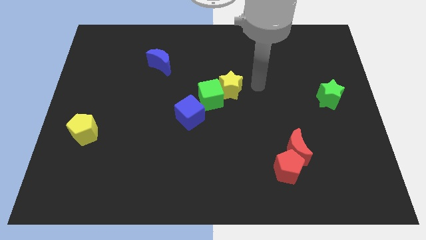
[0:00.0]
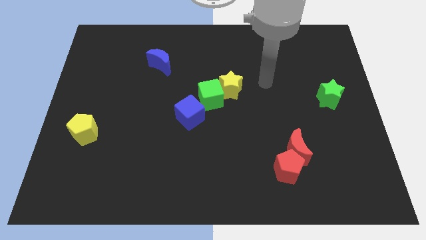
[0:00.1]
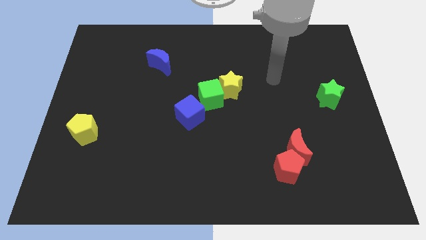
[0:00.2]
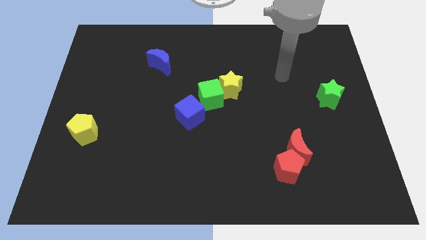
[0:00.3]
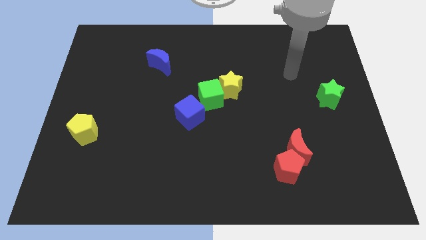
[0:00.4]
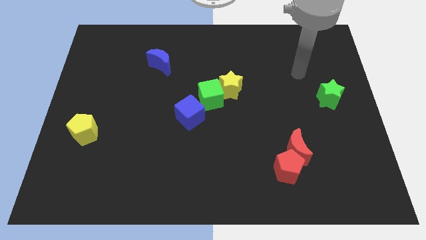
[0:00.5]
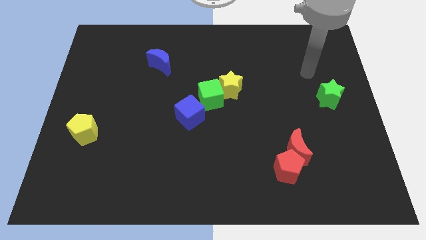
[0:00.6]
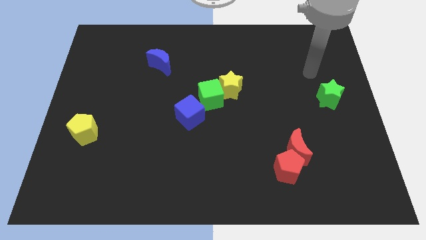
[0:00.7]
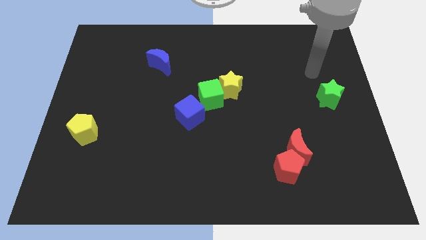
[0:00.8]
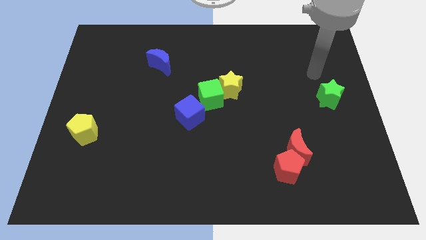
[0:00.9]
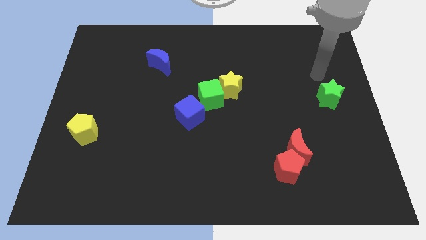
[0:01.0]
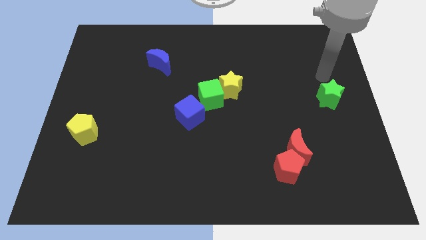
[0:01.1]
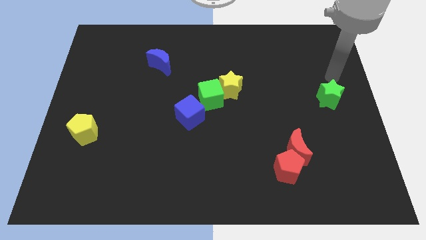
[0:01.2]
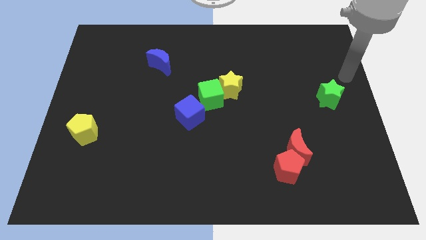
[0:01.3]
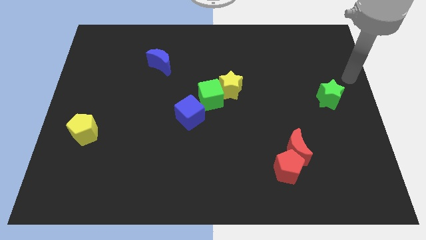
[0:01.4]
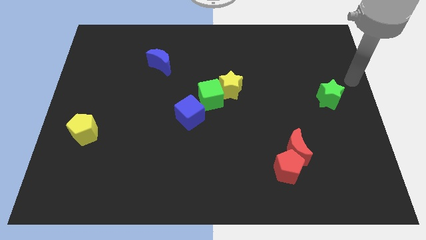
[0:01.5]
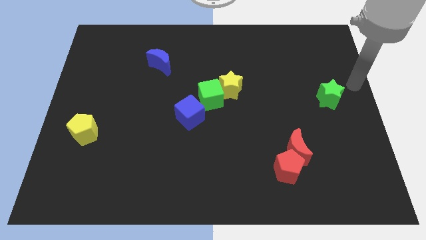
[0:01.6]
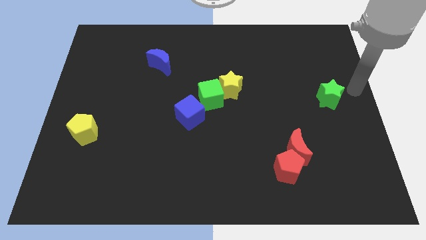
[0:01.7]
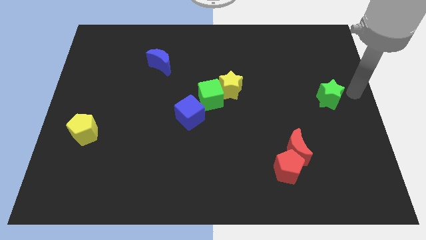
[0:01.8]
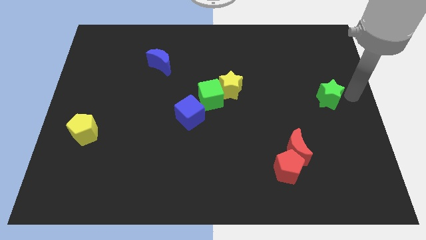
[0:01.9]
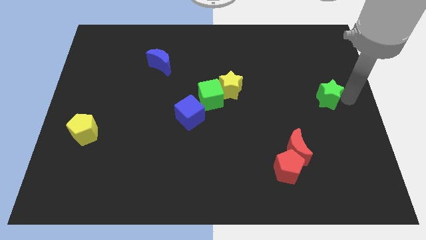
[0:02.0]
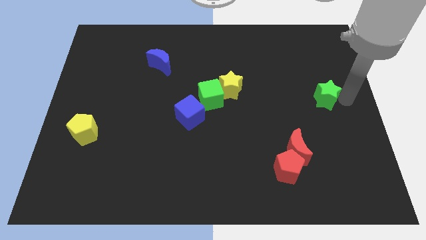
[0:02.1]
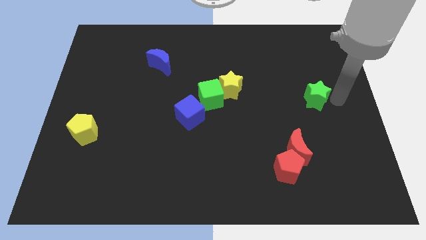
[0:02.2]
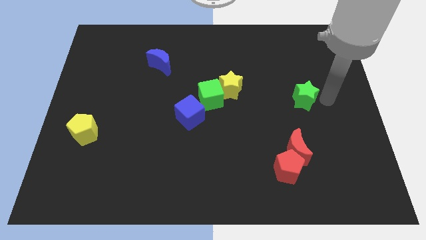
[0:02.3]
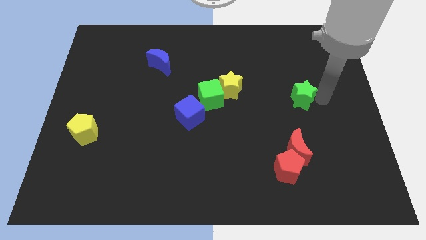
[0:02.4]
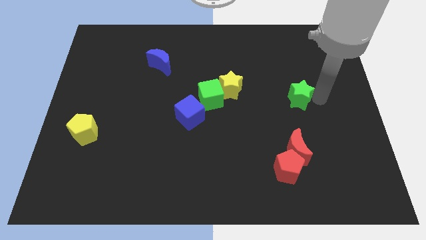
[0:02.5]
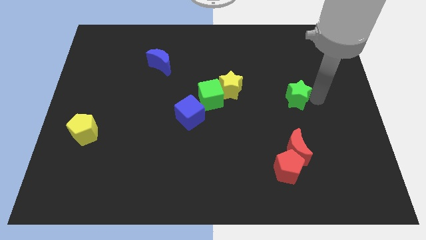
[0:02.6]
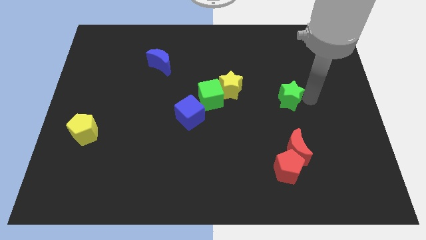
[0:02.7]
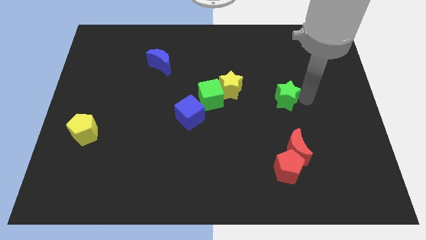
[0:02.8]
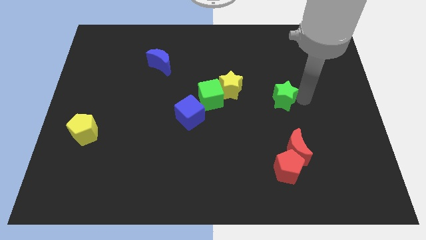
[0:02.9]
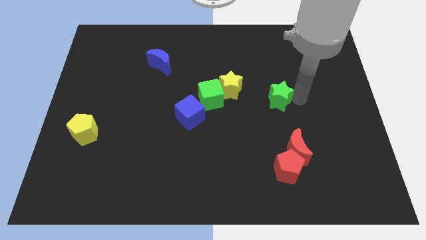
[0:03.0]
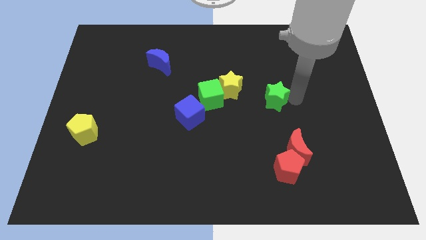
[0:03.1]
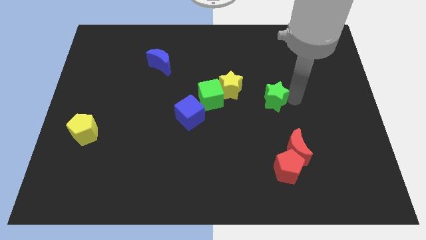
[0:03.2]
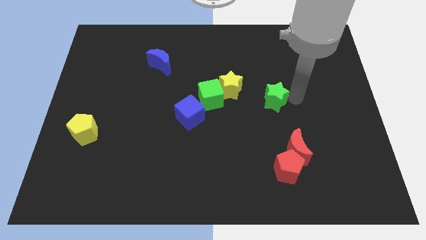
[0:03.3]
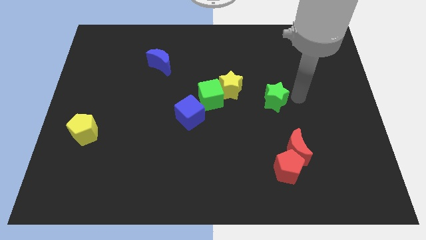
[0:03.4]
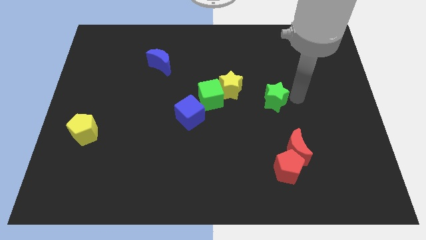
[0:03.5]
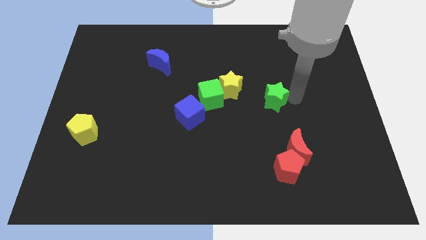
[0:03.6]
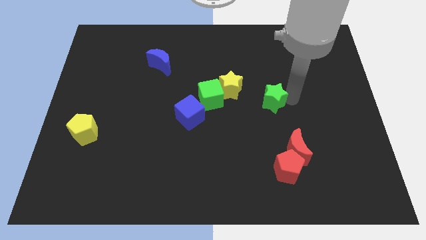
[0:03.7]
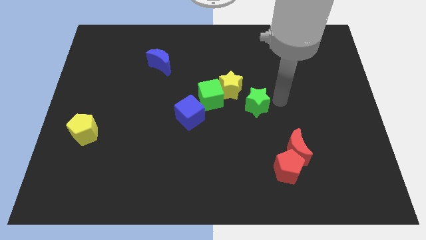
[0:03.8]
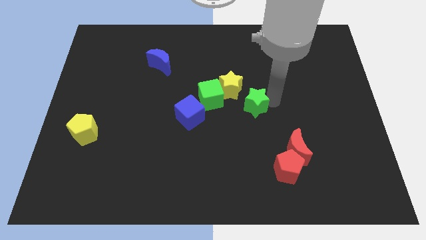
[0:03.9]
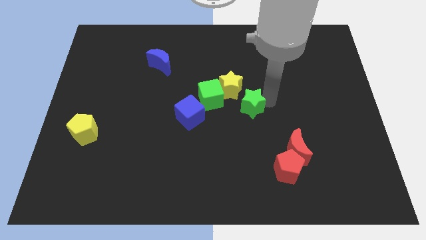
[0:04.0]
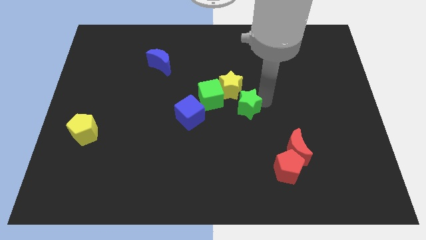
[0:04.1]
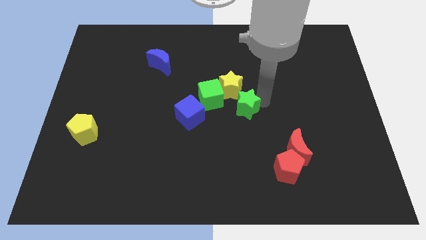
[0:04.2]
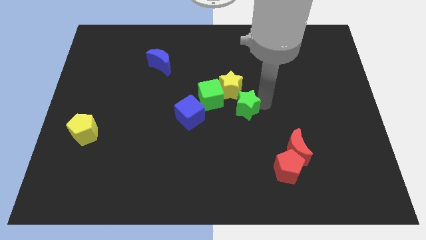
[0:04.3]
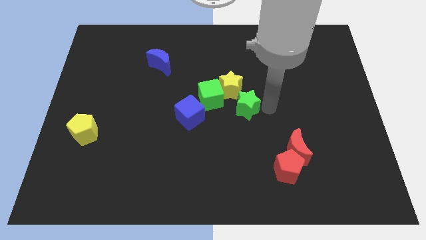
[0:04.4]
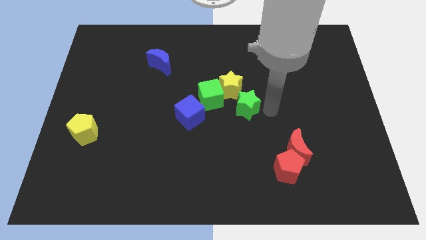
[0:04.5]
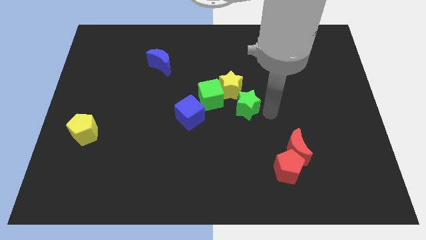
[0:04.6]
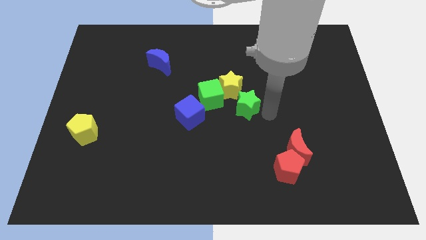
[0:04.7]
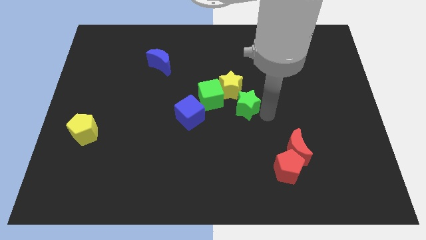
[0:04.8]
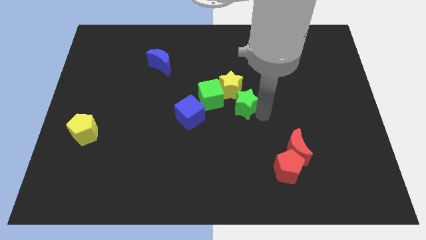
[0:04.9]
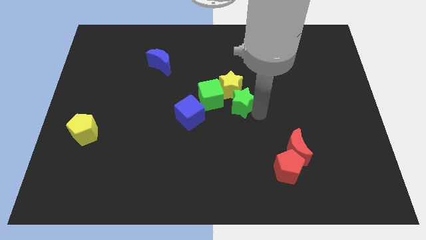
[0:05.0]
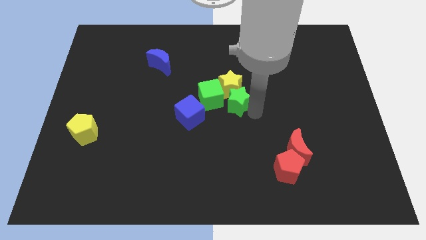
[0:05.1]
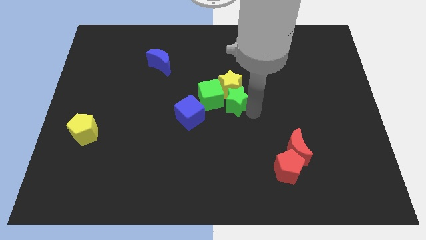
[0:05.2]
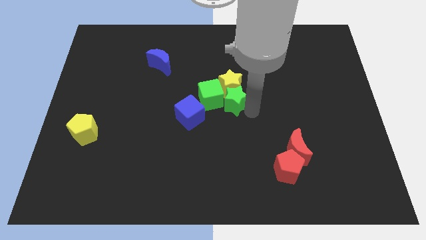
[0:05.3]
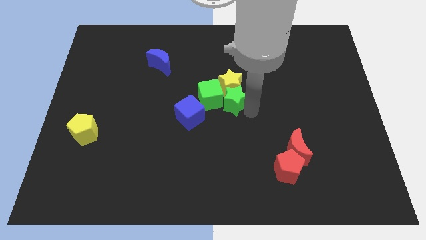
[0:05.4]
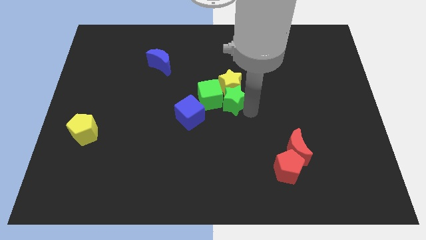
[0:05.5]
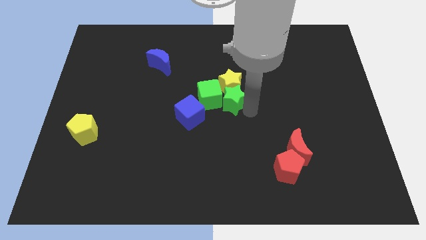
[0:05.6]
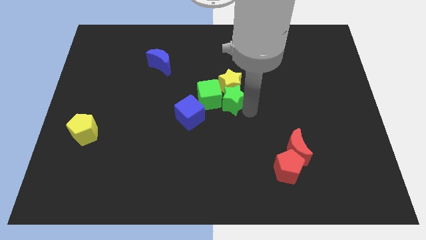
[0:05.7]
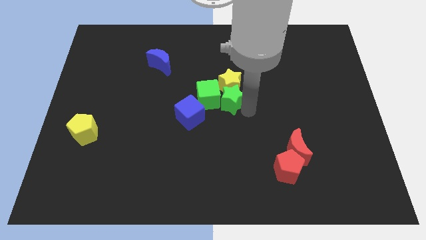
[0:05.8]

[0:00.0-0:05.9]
slide the green star into the green cube

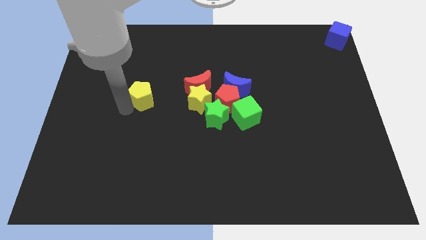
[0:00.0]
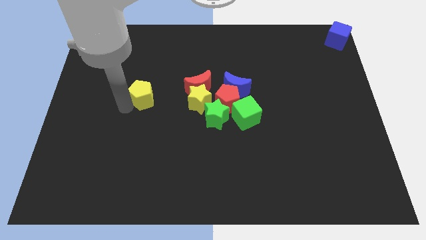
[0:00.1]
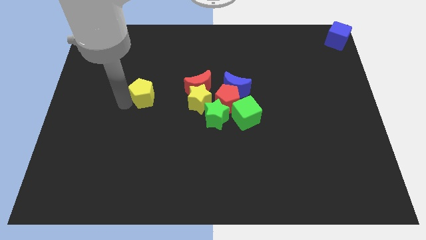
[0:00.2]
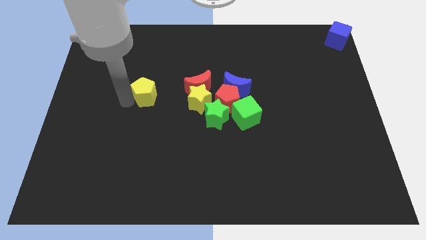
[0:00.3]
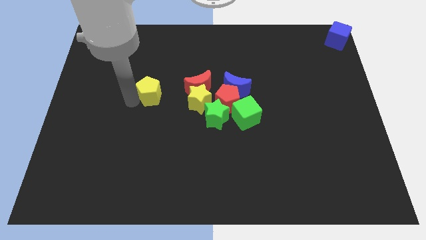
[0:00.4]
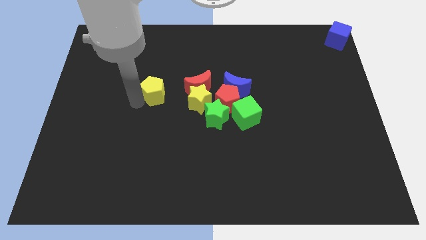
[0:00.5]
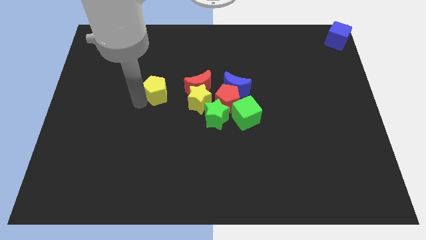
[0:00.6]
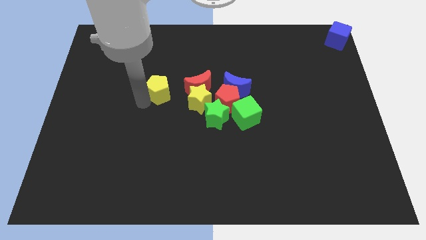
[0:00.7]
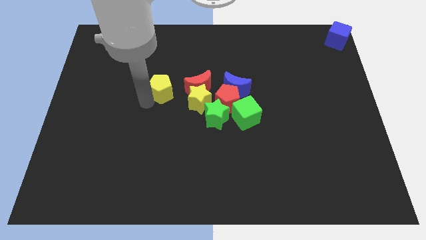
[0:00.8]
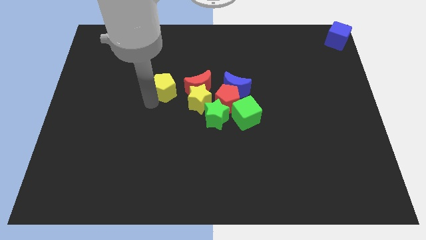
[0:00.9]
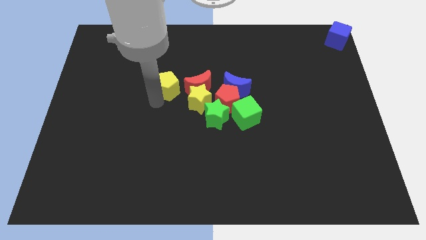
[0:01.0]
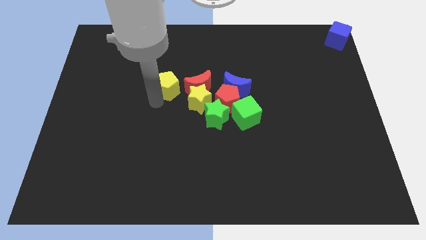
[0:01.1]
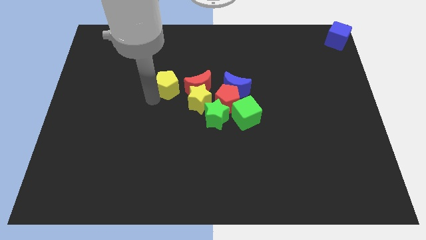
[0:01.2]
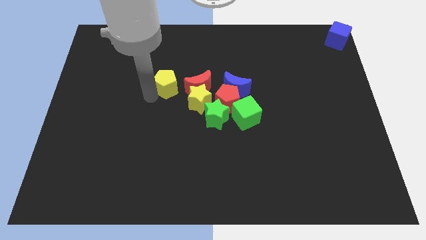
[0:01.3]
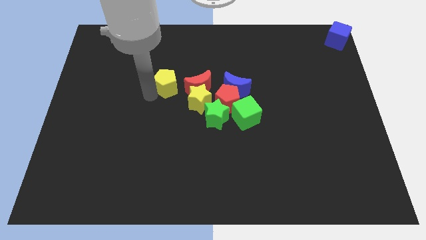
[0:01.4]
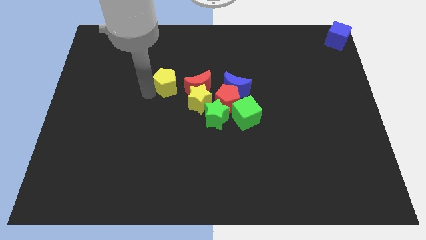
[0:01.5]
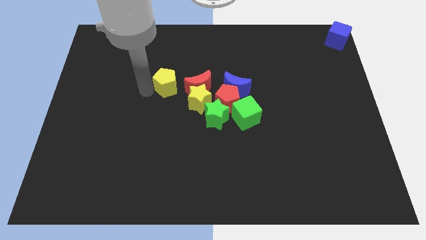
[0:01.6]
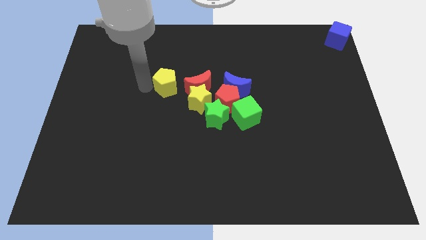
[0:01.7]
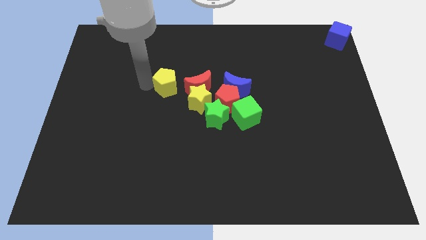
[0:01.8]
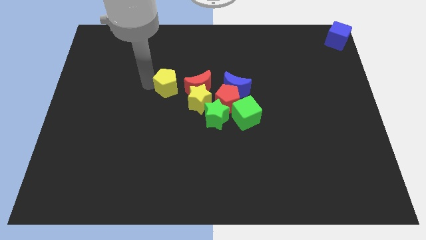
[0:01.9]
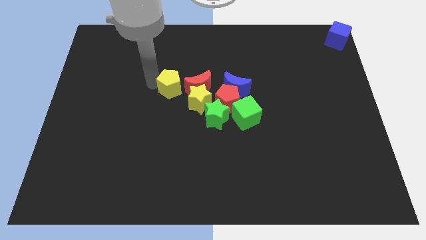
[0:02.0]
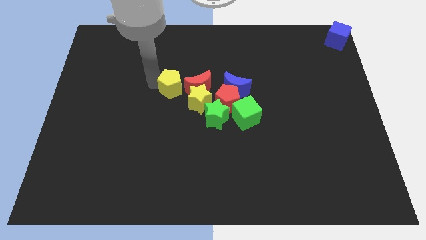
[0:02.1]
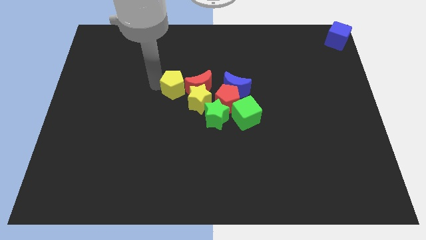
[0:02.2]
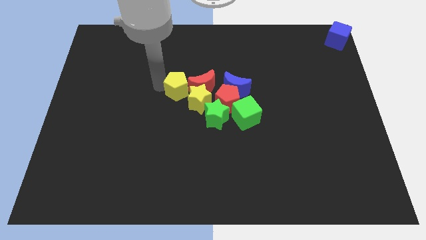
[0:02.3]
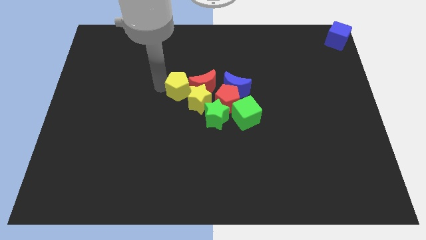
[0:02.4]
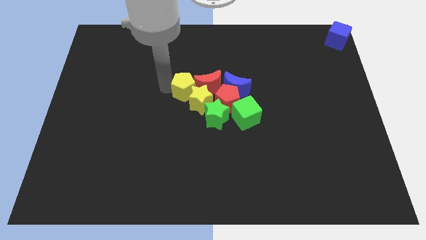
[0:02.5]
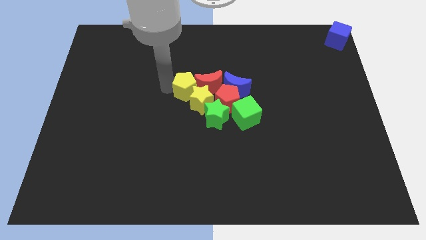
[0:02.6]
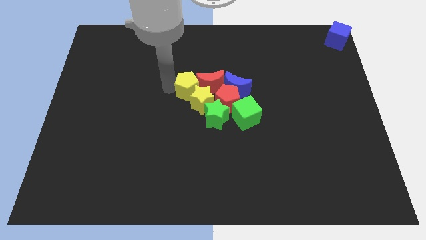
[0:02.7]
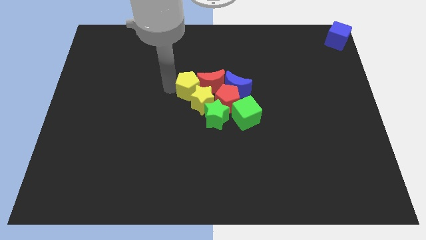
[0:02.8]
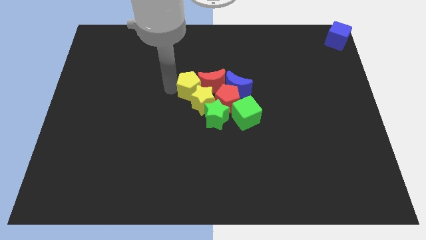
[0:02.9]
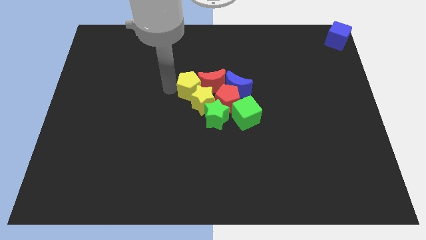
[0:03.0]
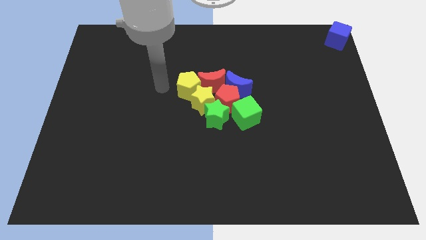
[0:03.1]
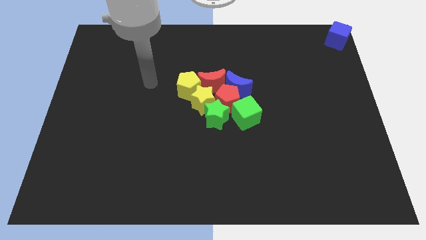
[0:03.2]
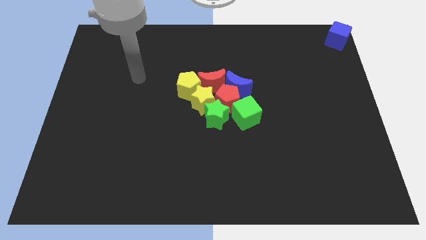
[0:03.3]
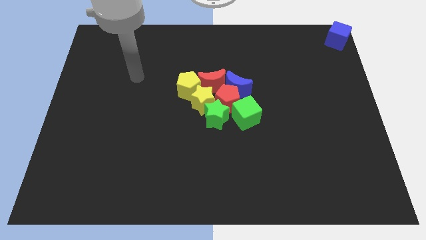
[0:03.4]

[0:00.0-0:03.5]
move yellow pentagon into group of blocks
